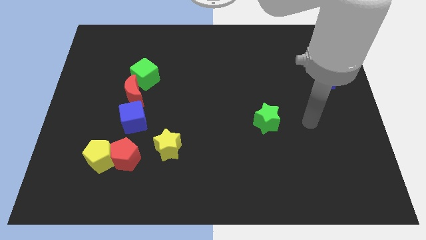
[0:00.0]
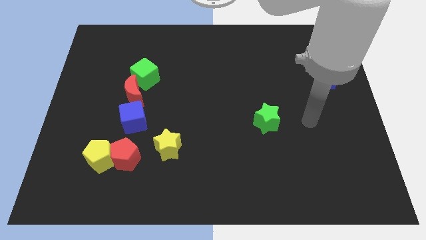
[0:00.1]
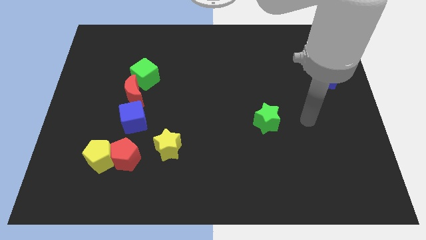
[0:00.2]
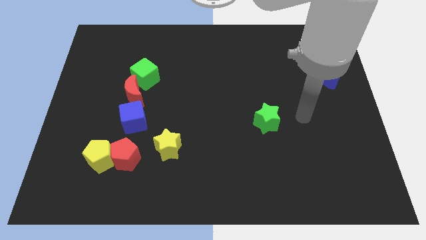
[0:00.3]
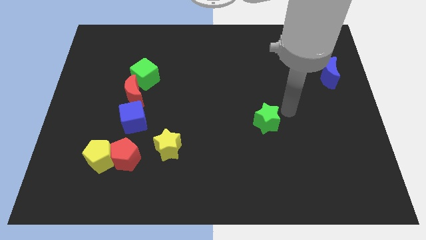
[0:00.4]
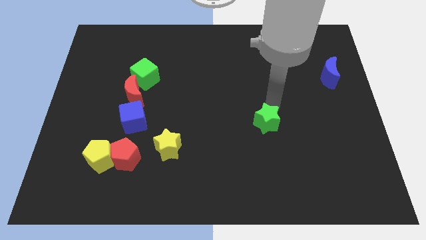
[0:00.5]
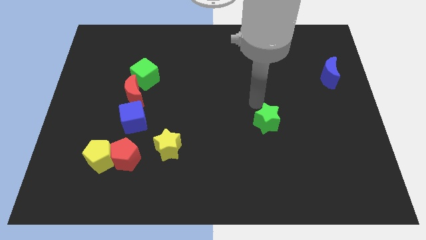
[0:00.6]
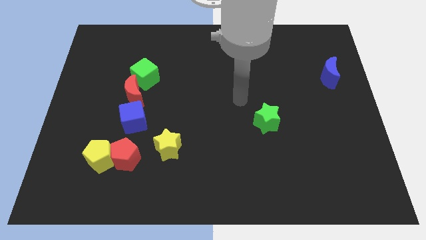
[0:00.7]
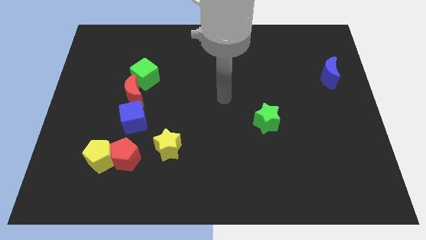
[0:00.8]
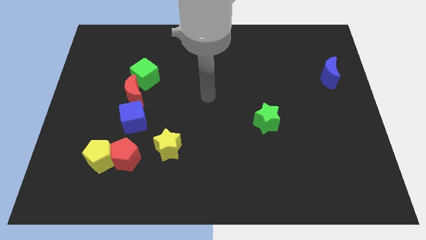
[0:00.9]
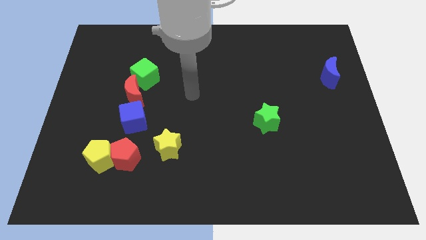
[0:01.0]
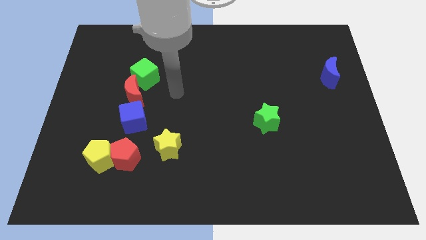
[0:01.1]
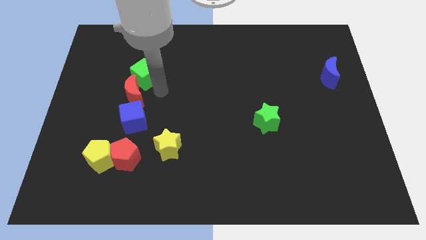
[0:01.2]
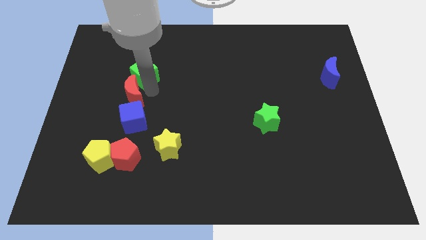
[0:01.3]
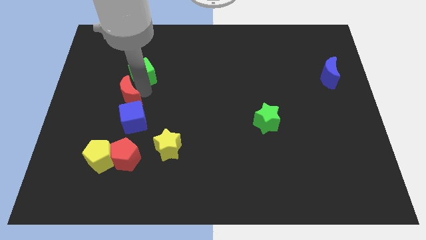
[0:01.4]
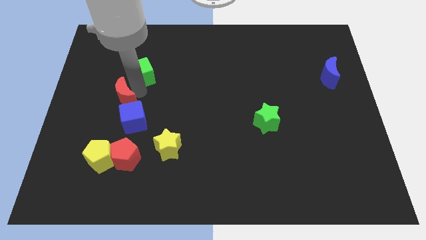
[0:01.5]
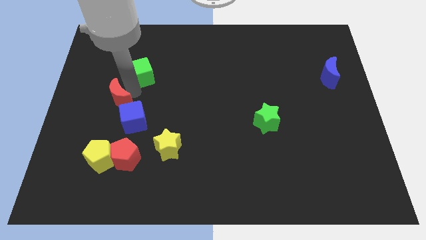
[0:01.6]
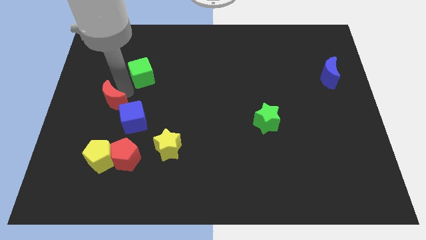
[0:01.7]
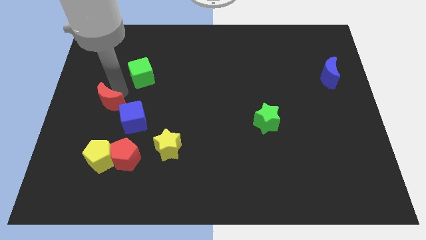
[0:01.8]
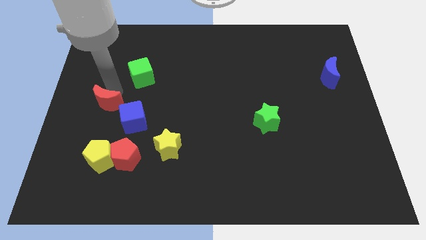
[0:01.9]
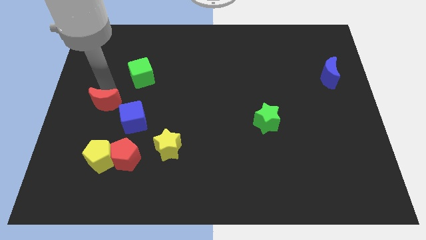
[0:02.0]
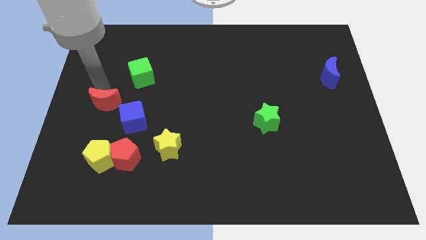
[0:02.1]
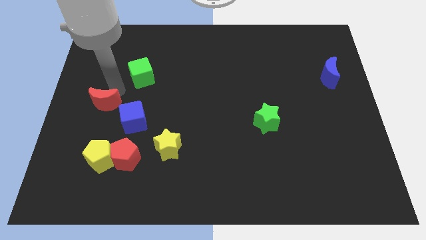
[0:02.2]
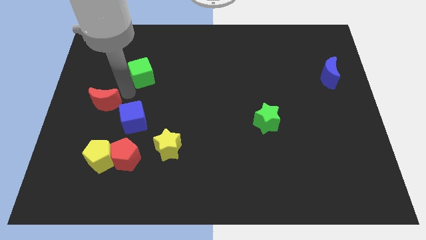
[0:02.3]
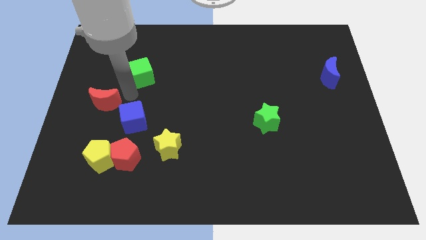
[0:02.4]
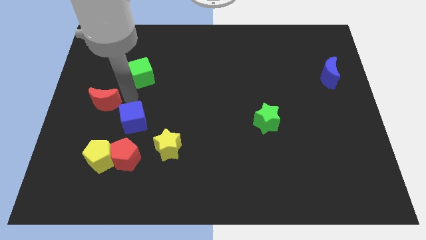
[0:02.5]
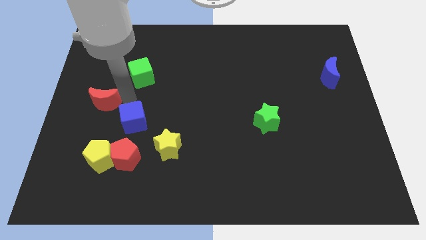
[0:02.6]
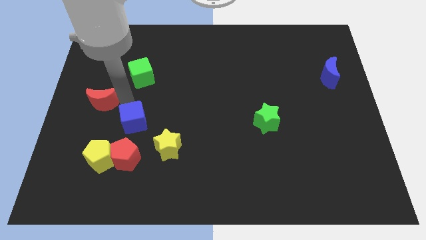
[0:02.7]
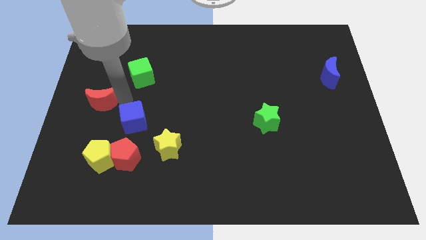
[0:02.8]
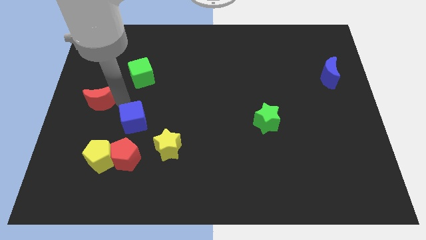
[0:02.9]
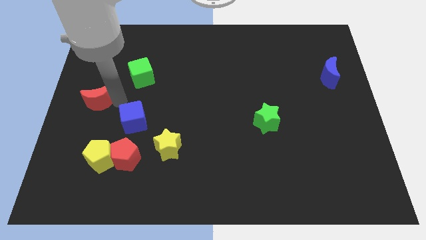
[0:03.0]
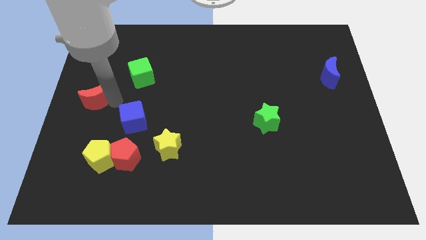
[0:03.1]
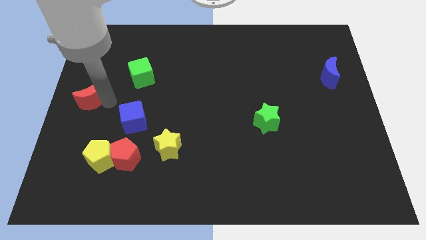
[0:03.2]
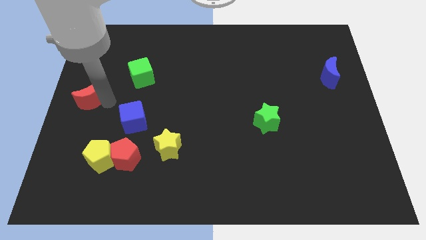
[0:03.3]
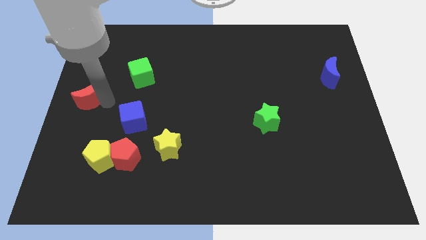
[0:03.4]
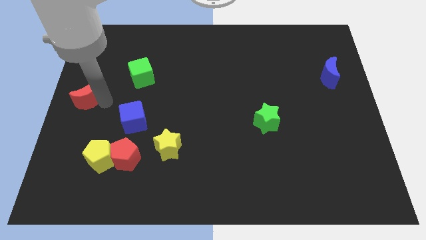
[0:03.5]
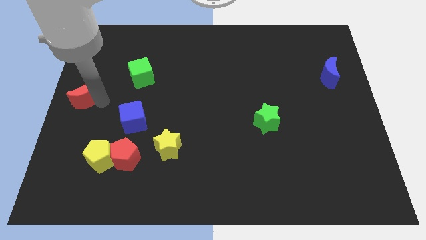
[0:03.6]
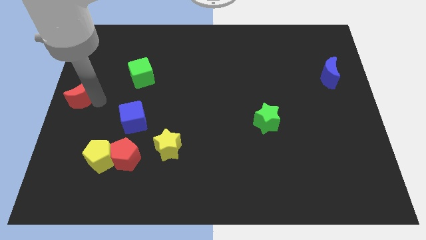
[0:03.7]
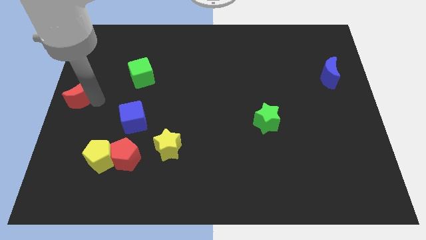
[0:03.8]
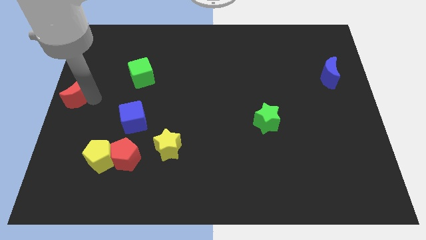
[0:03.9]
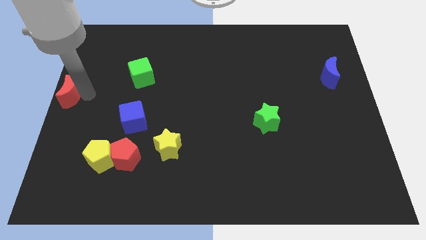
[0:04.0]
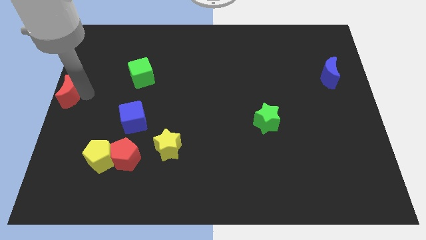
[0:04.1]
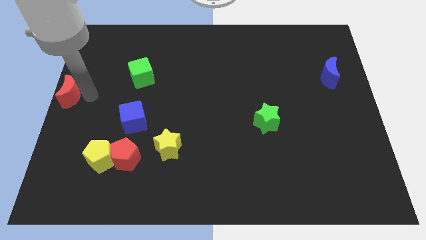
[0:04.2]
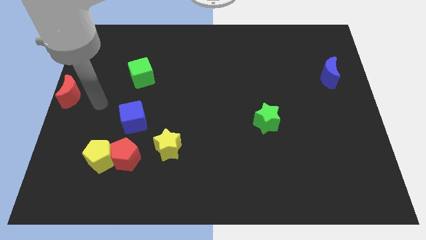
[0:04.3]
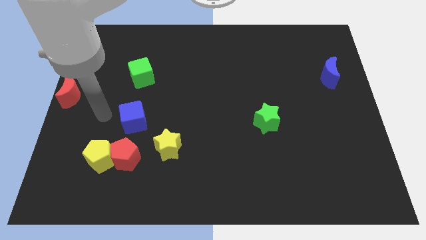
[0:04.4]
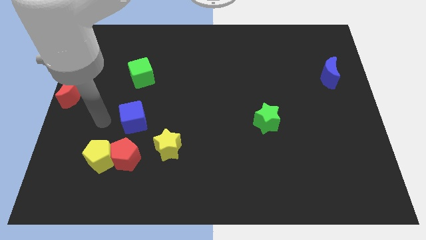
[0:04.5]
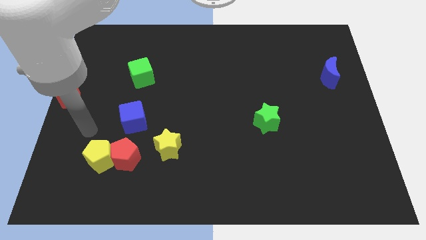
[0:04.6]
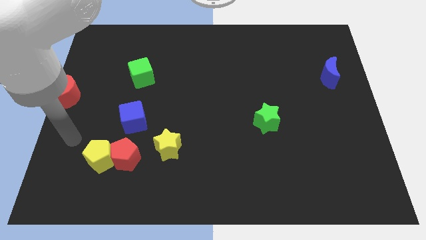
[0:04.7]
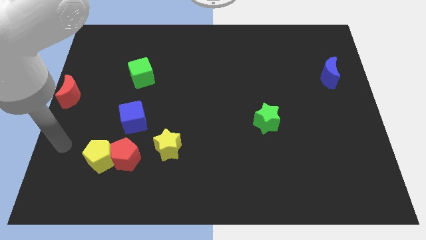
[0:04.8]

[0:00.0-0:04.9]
move the red moon to the left middle of the board

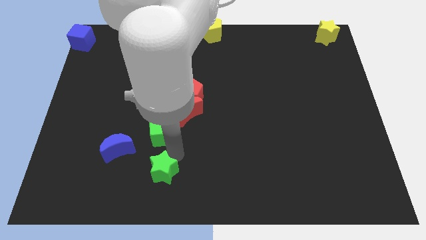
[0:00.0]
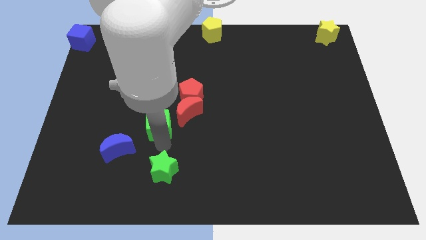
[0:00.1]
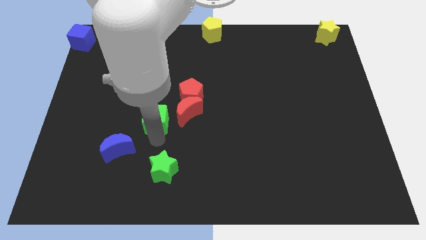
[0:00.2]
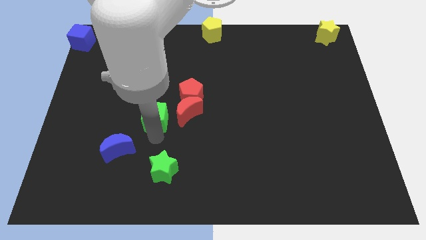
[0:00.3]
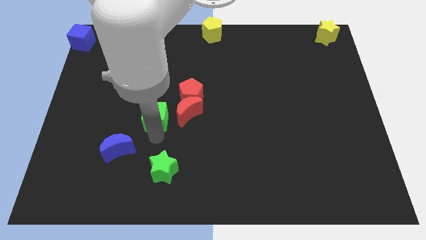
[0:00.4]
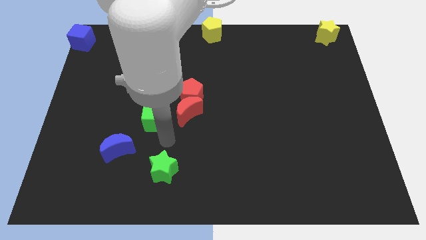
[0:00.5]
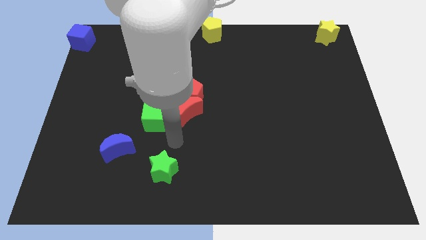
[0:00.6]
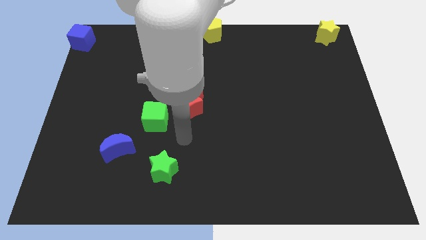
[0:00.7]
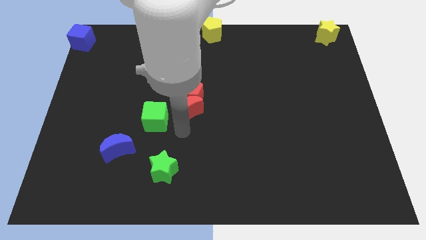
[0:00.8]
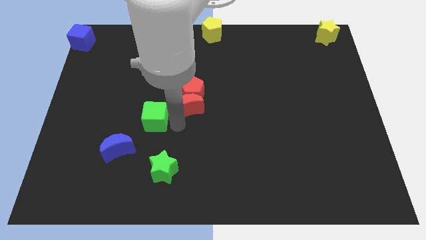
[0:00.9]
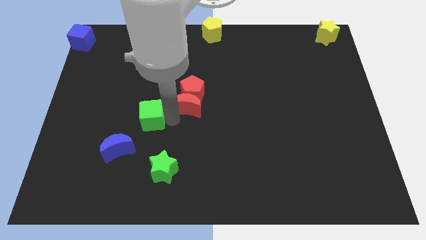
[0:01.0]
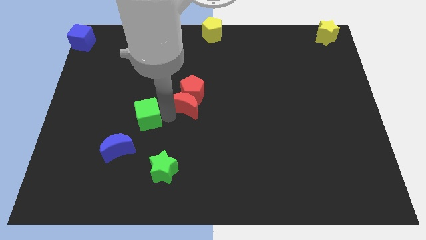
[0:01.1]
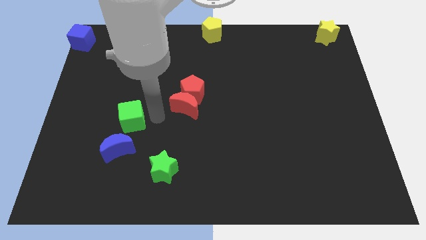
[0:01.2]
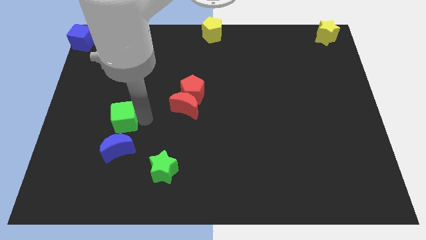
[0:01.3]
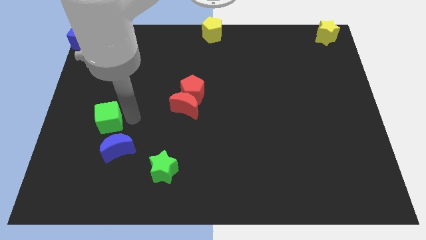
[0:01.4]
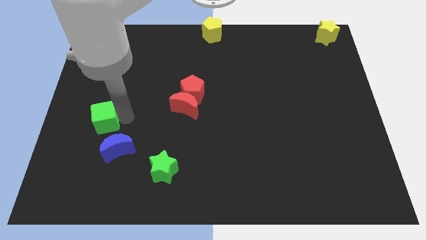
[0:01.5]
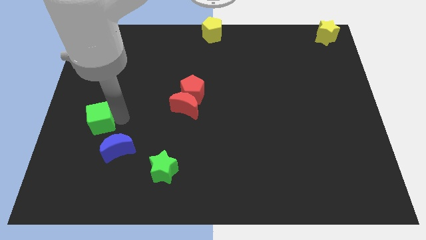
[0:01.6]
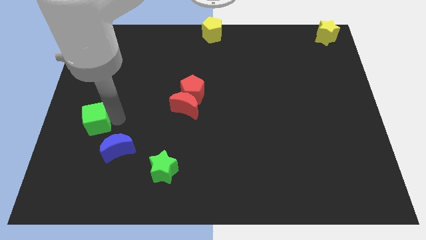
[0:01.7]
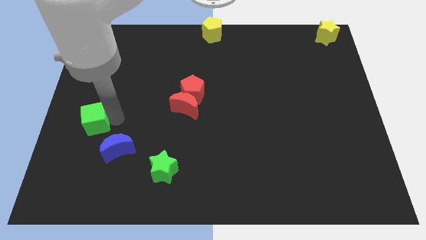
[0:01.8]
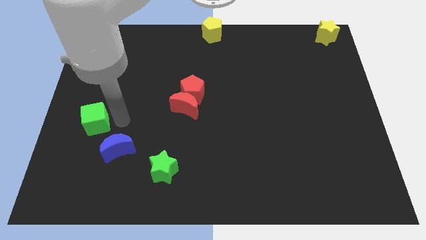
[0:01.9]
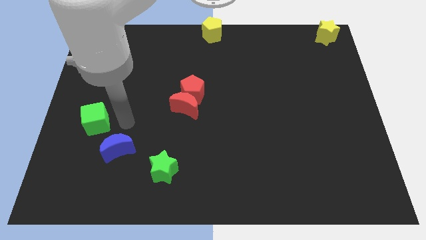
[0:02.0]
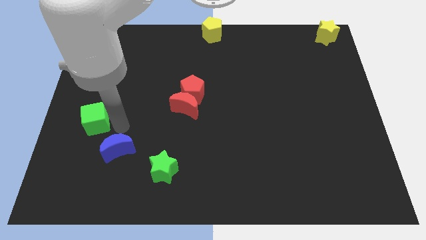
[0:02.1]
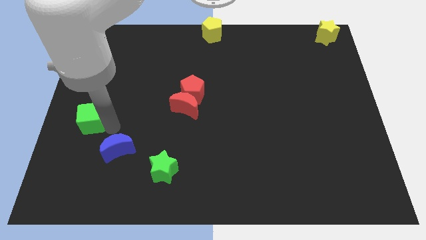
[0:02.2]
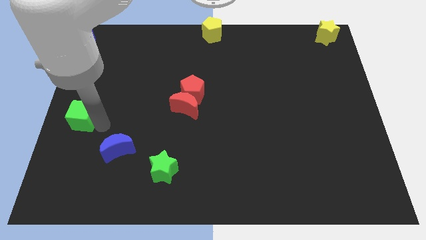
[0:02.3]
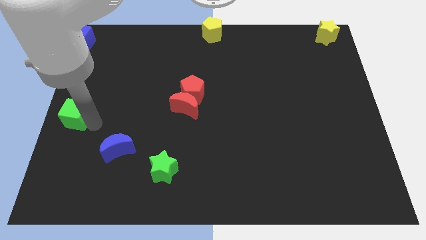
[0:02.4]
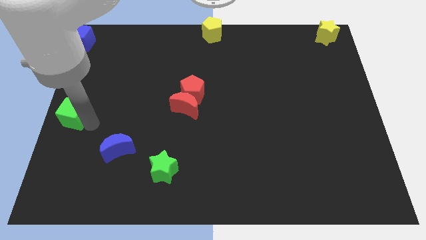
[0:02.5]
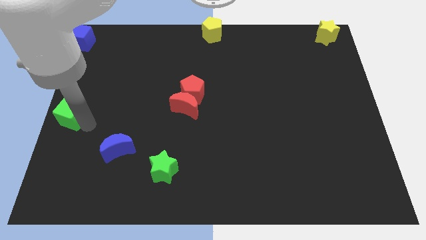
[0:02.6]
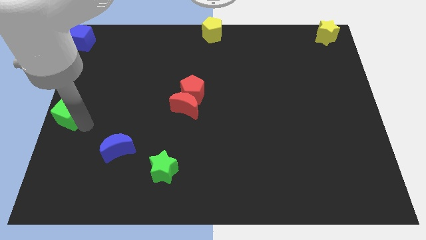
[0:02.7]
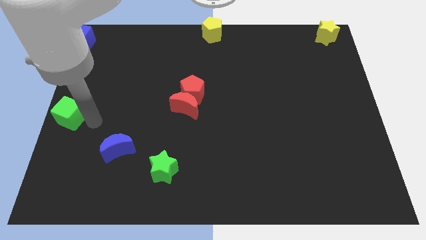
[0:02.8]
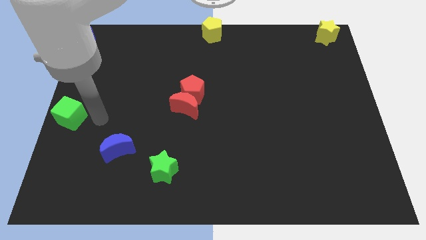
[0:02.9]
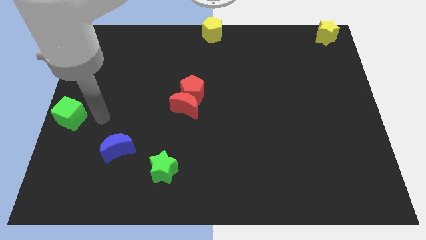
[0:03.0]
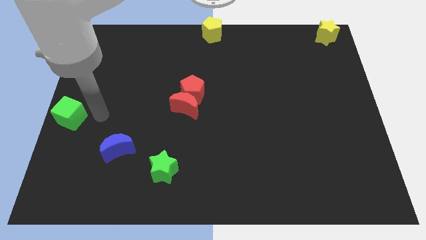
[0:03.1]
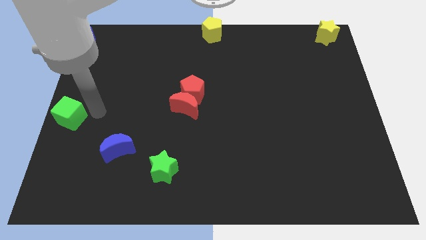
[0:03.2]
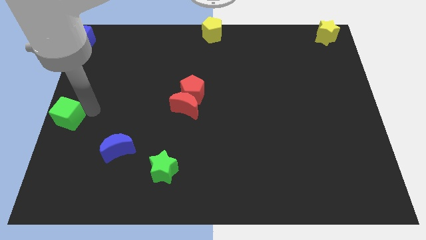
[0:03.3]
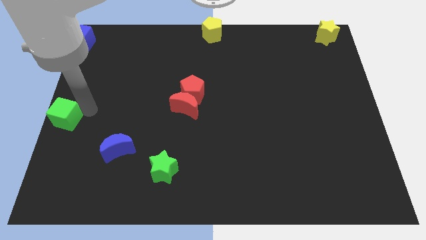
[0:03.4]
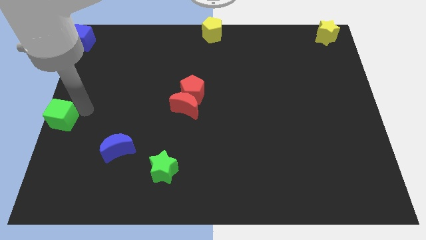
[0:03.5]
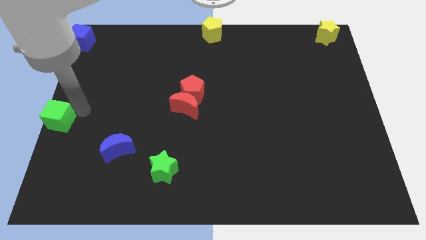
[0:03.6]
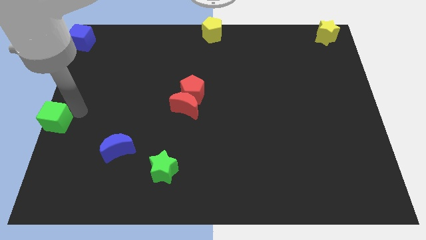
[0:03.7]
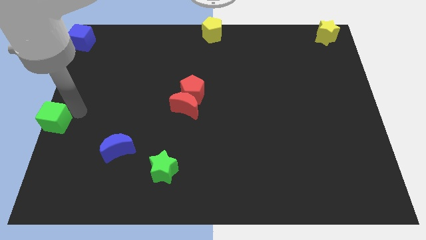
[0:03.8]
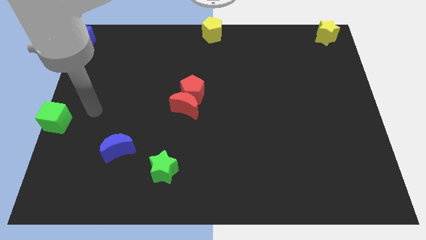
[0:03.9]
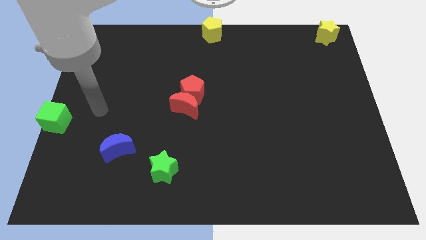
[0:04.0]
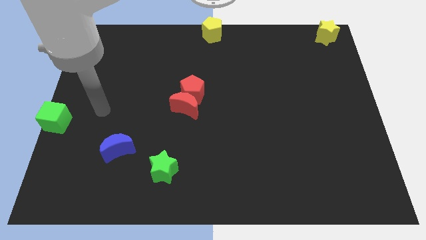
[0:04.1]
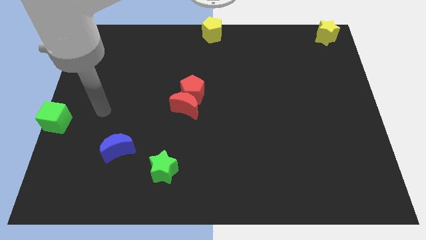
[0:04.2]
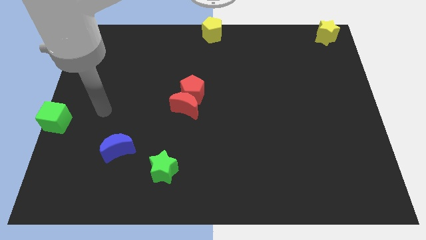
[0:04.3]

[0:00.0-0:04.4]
move the green cube to the left center of the board
